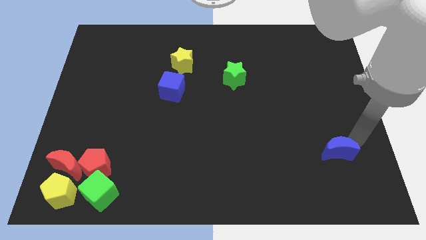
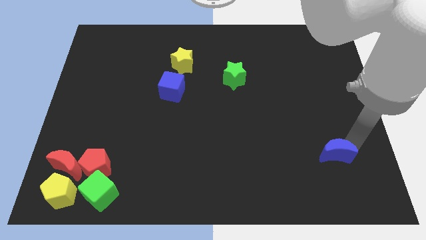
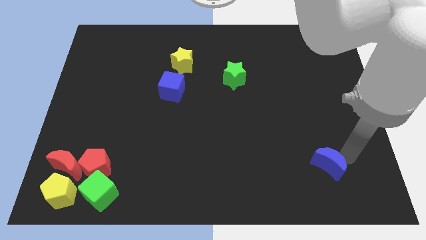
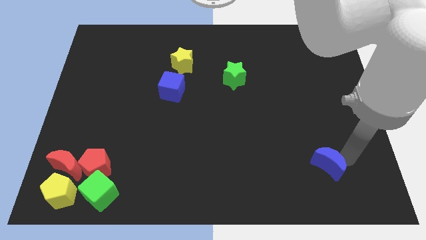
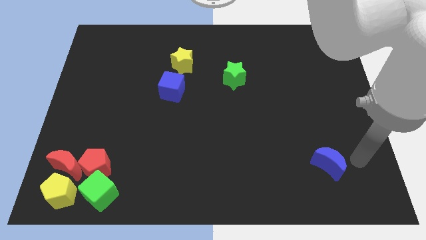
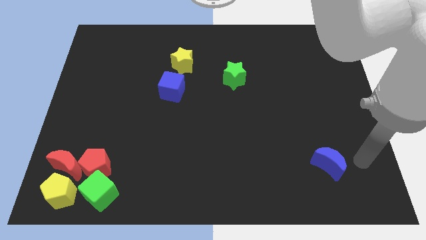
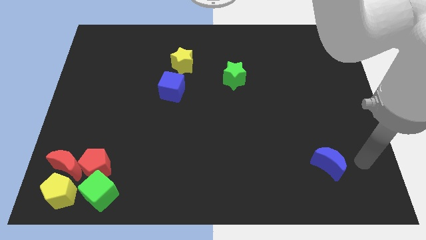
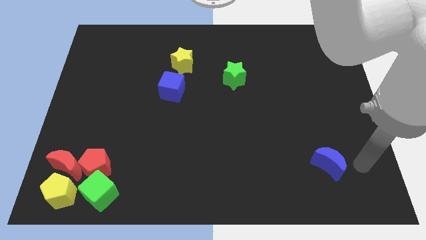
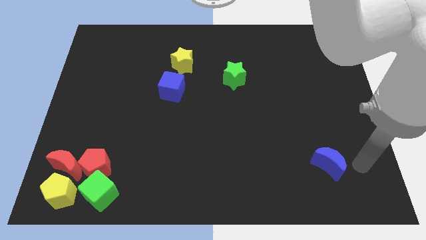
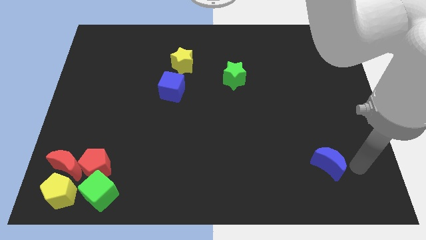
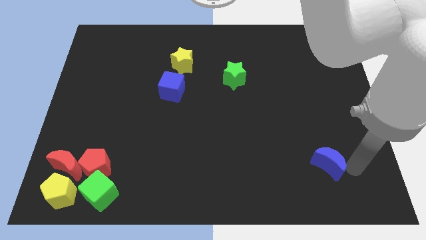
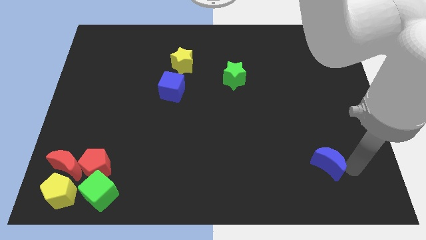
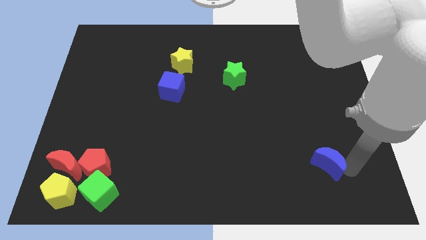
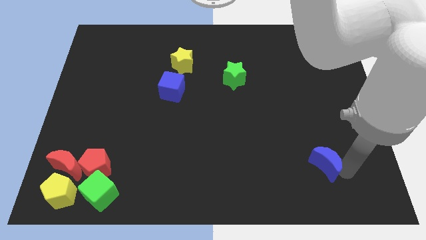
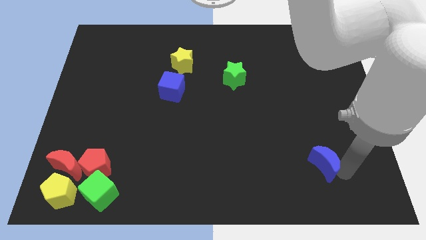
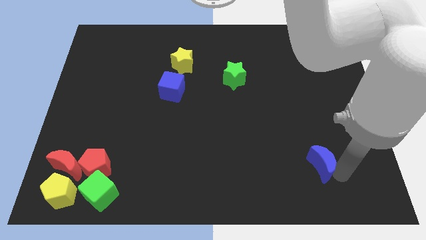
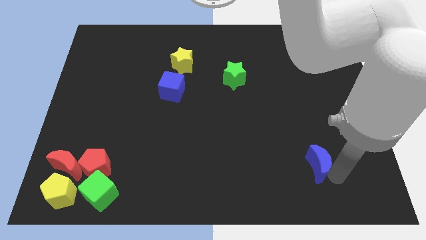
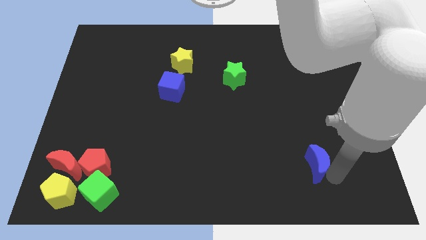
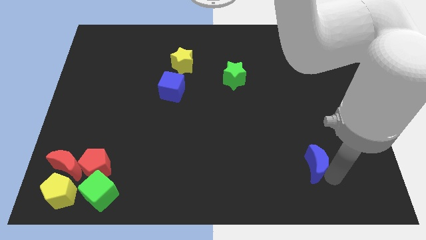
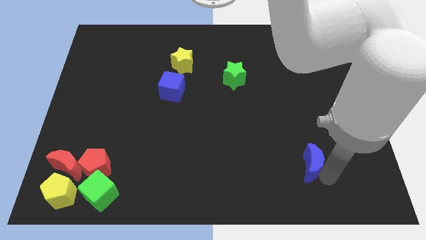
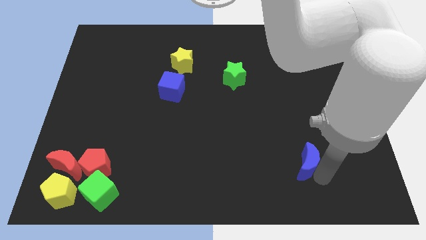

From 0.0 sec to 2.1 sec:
push the blue moon towards left side

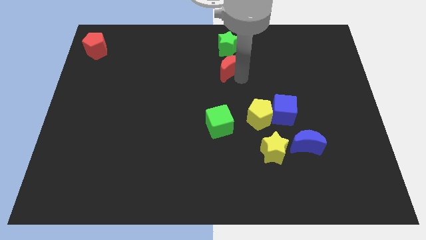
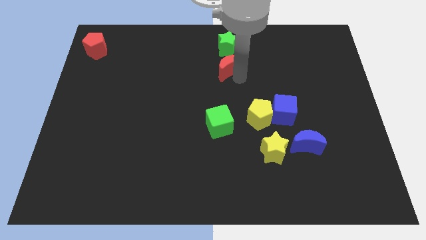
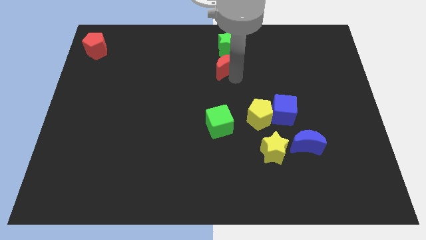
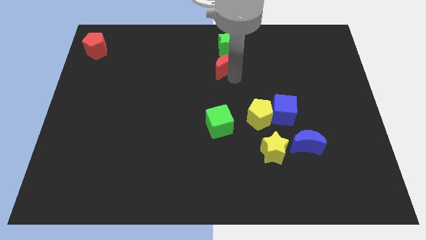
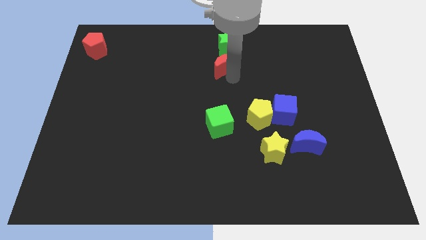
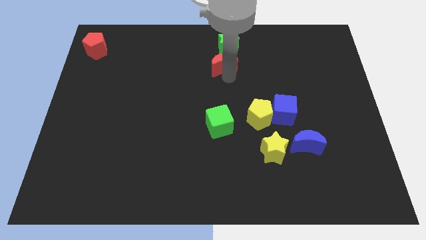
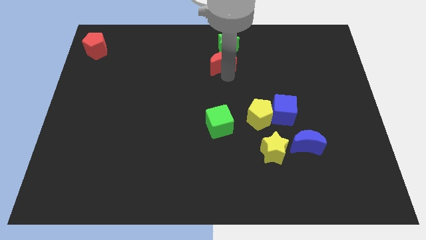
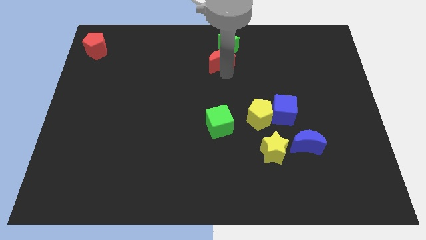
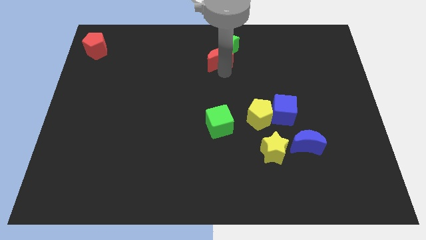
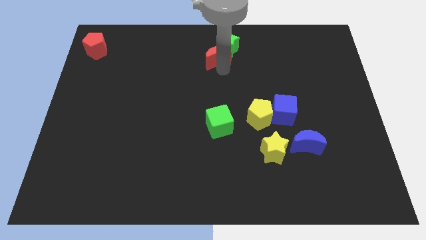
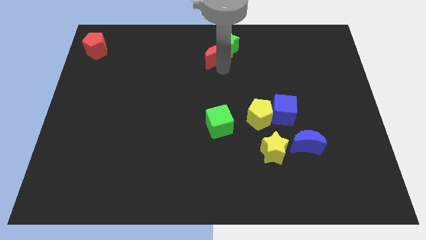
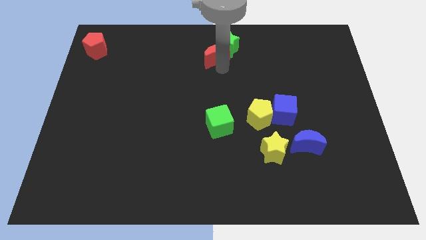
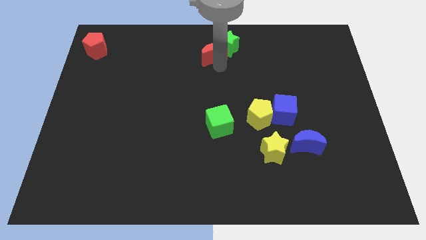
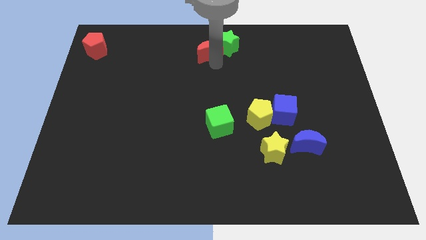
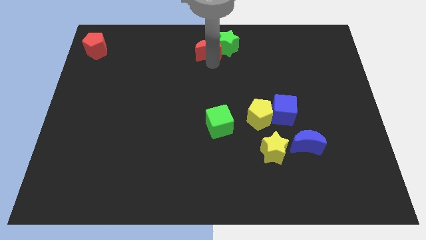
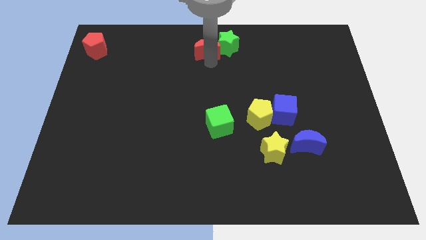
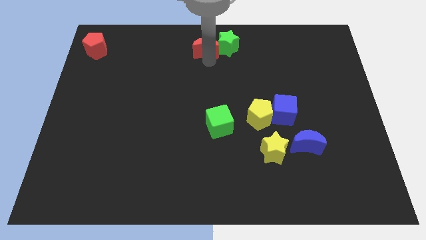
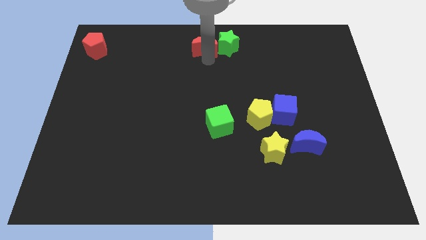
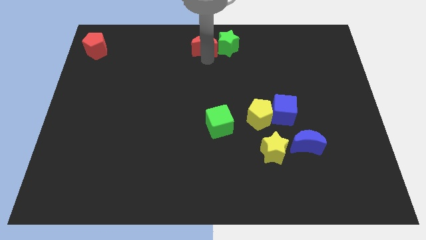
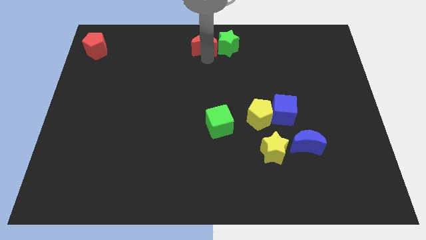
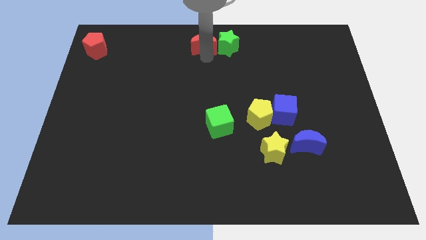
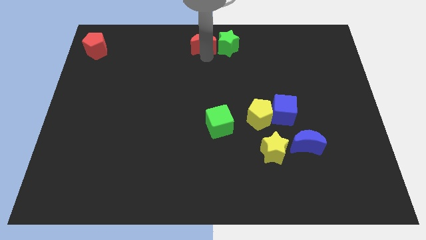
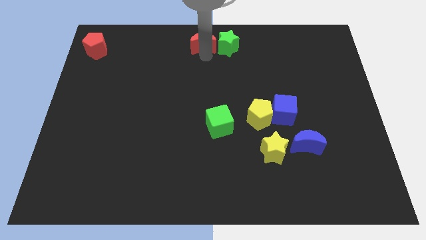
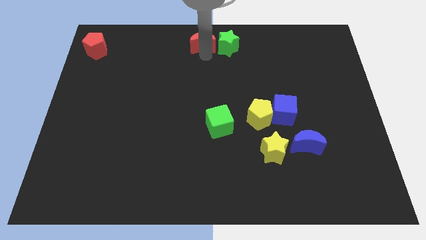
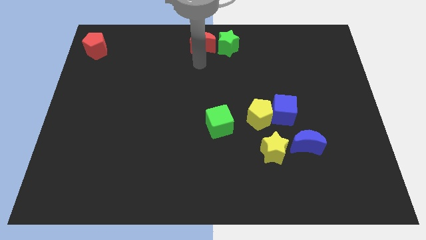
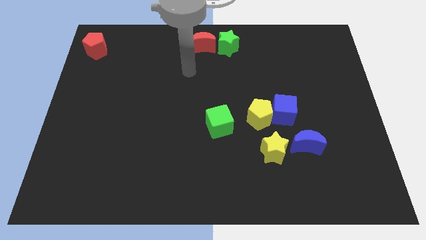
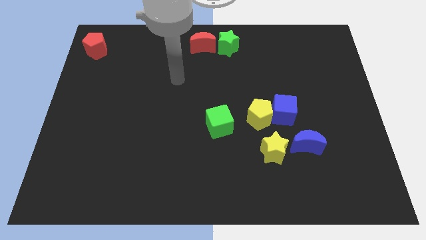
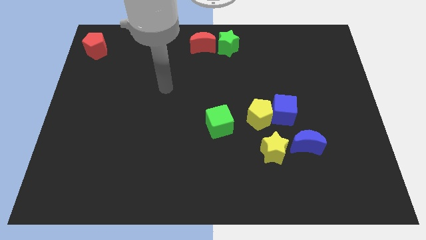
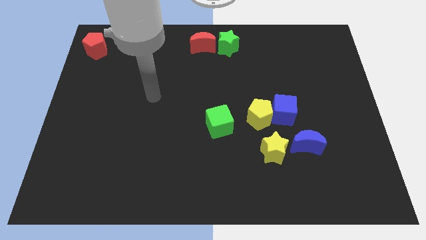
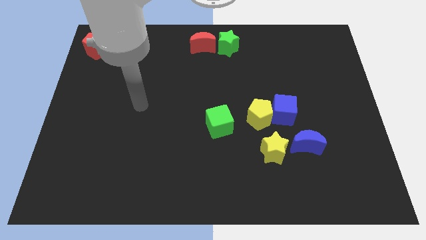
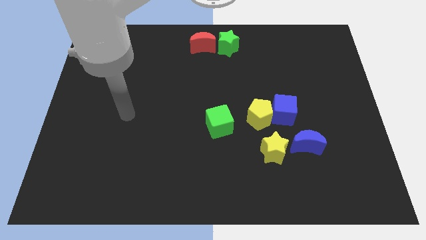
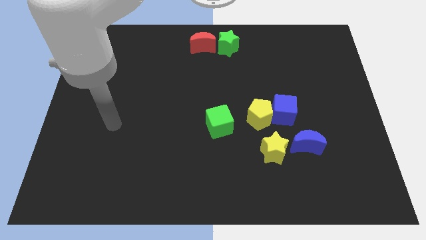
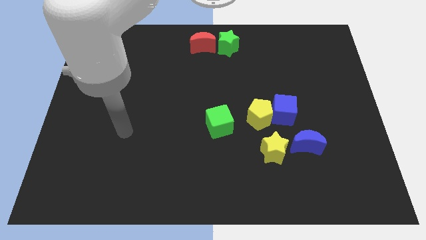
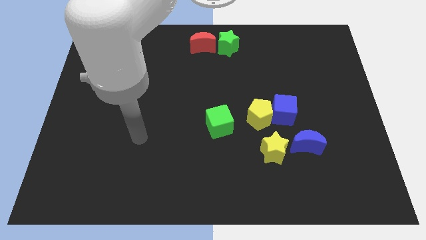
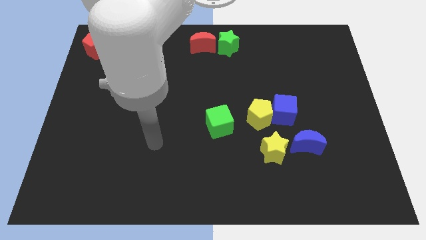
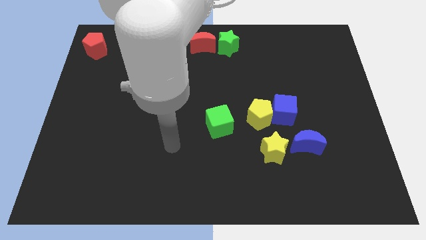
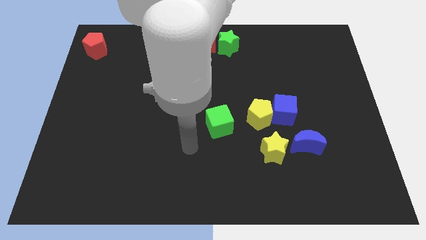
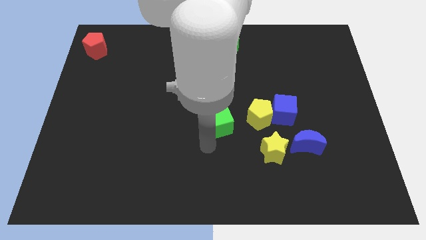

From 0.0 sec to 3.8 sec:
put the red crescent on the left side of the green star

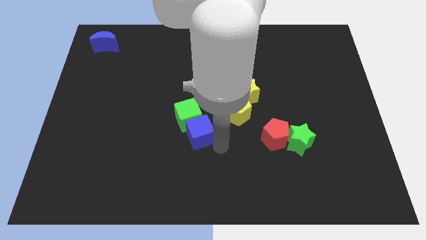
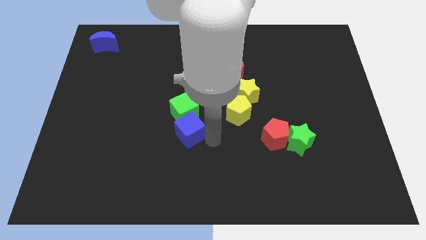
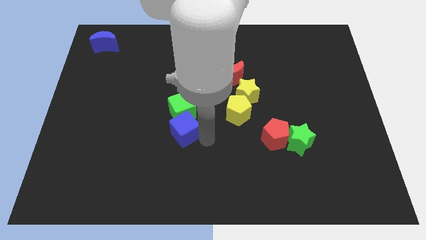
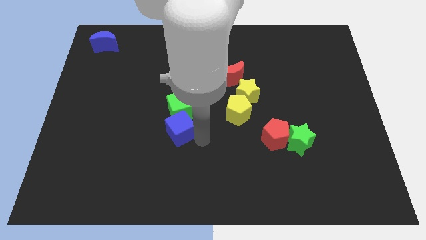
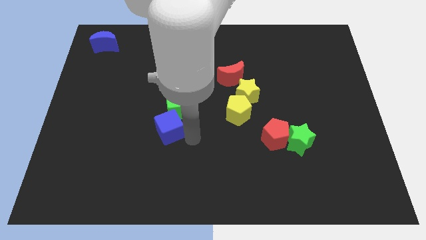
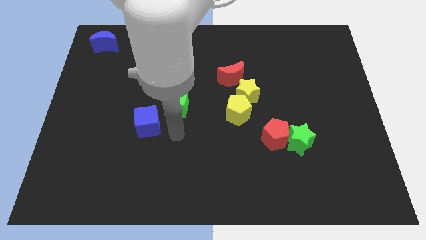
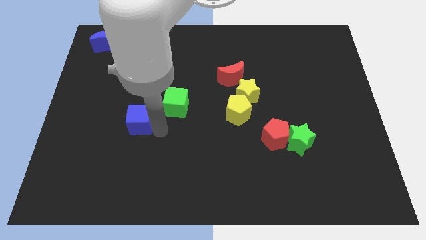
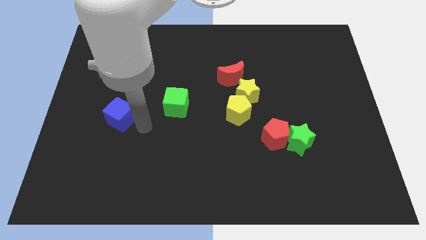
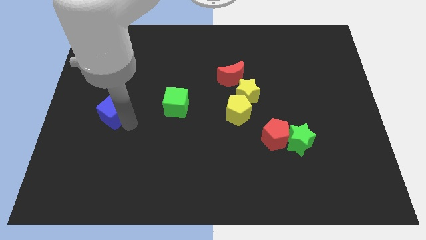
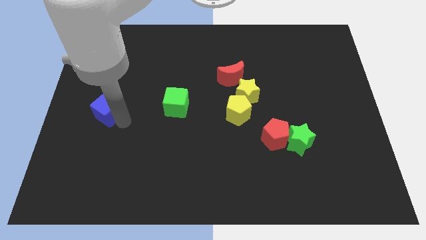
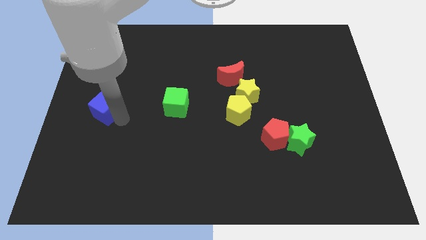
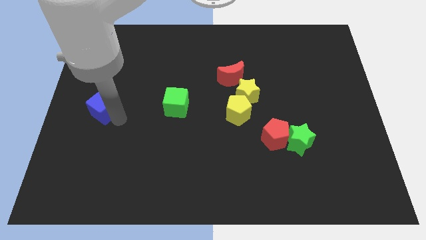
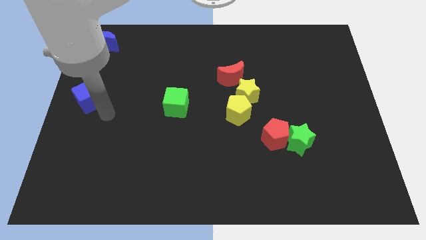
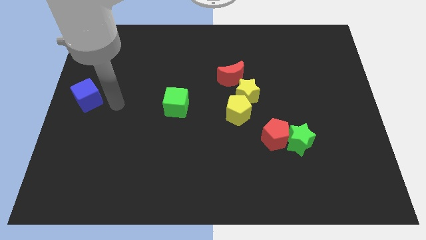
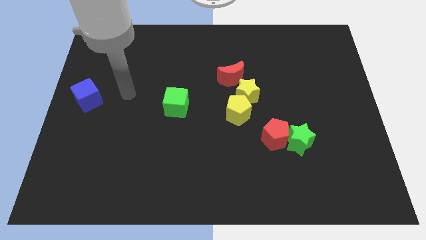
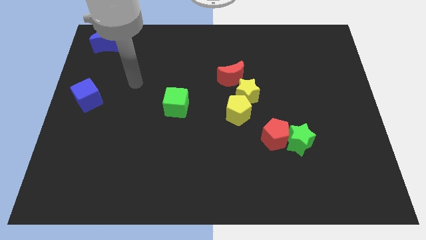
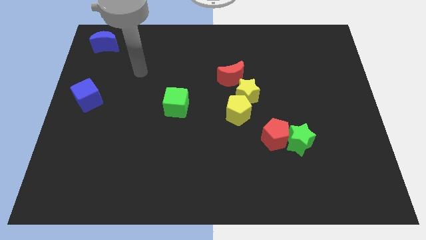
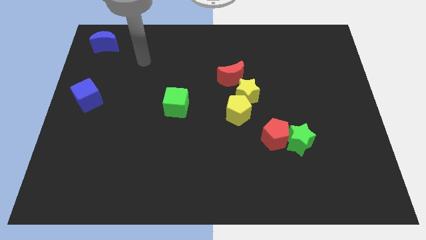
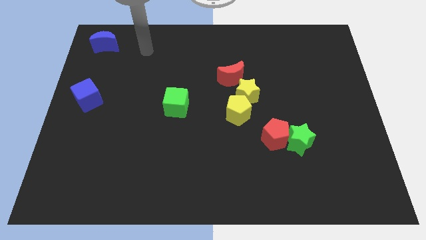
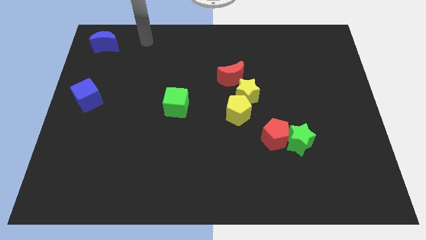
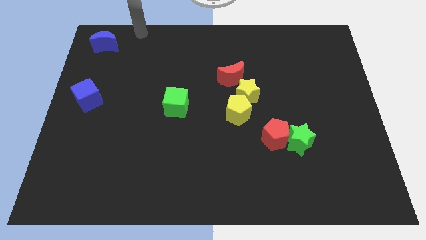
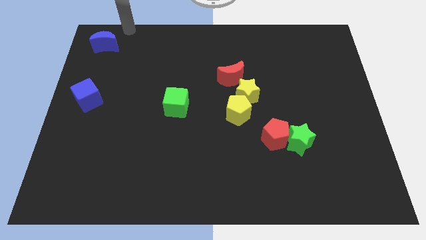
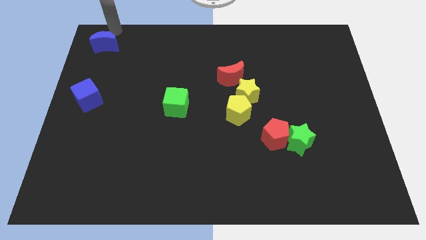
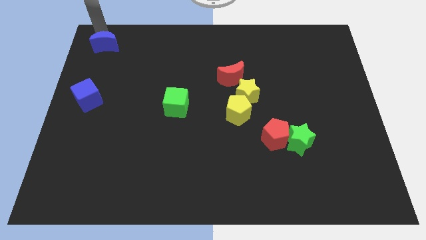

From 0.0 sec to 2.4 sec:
move the blue cube to the centre left of the board

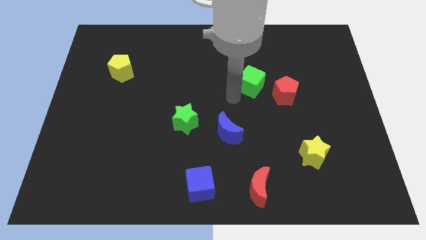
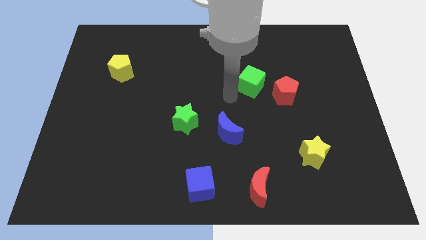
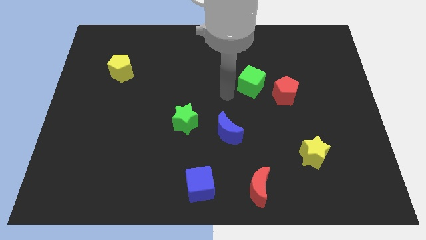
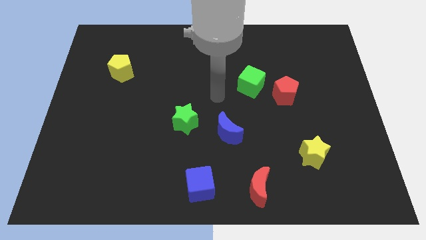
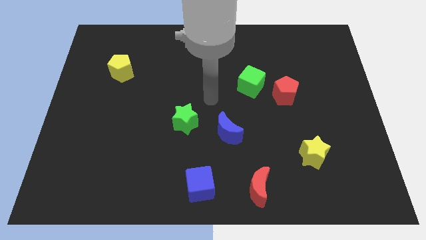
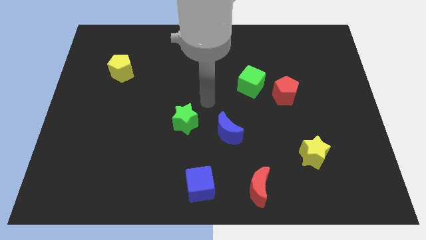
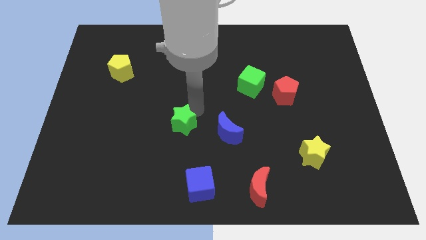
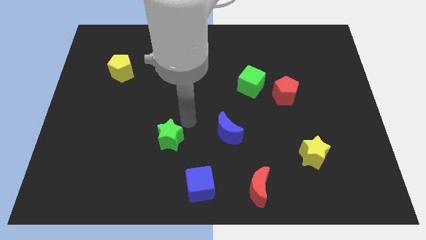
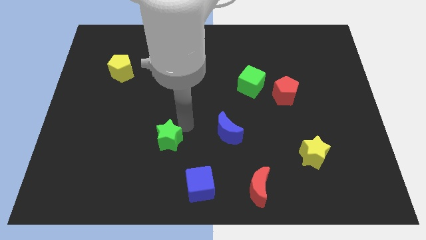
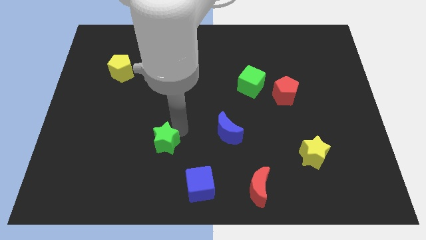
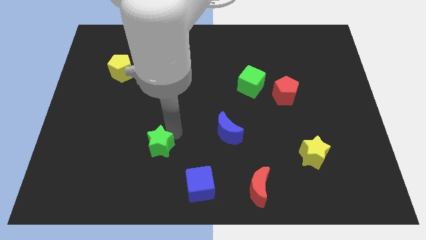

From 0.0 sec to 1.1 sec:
slightly move down the green star to form a triangle with blue blocks
